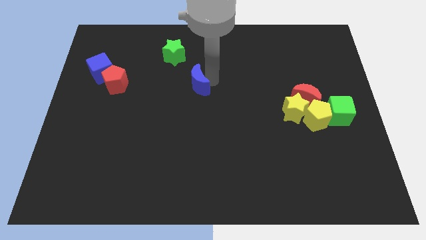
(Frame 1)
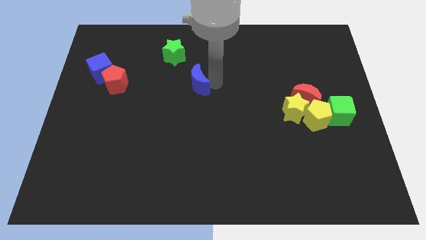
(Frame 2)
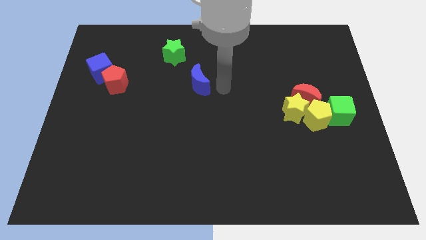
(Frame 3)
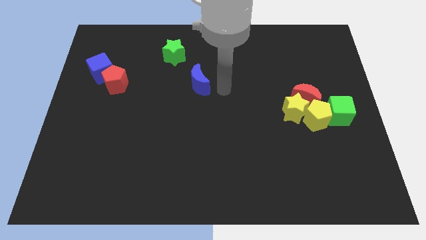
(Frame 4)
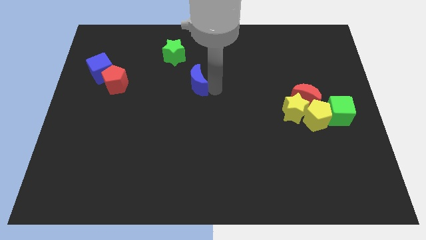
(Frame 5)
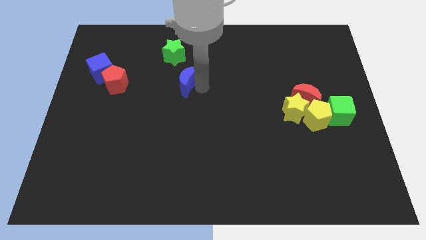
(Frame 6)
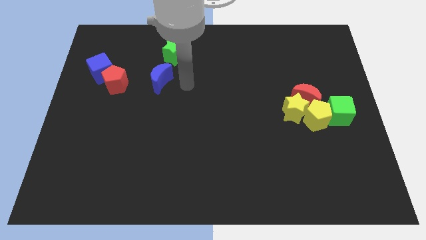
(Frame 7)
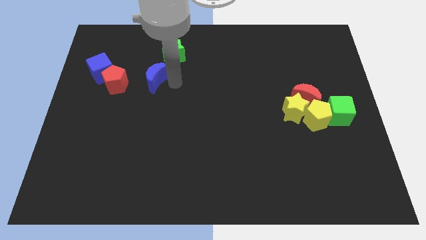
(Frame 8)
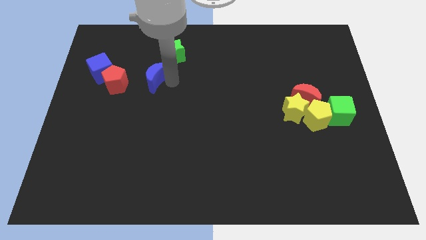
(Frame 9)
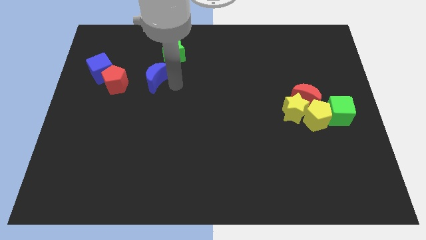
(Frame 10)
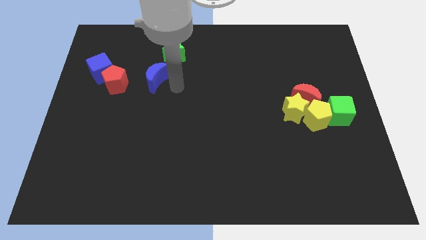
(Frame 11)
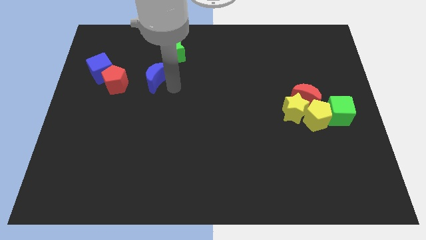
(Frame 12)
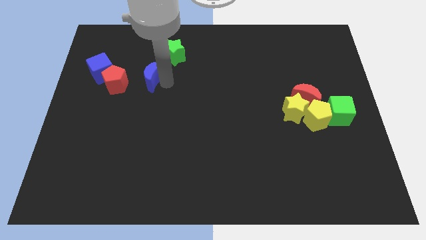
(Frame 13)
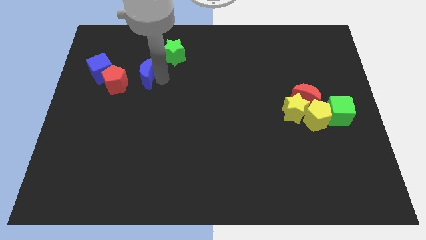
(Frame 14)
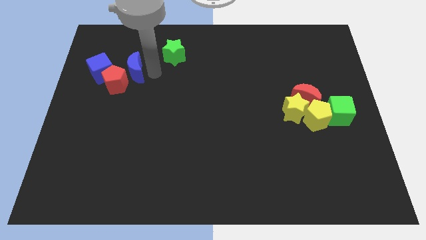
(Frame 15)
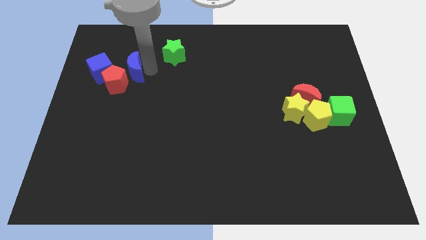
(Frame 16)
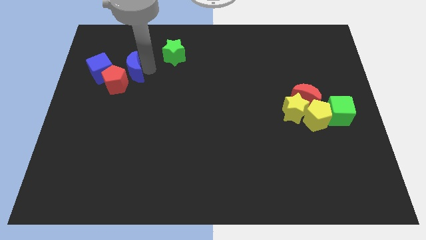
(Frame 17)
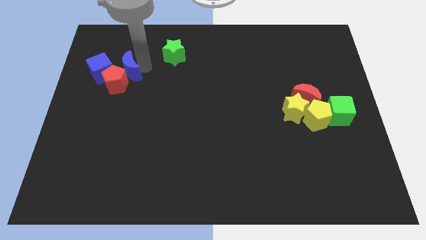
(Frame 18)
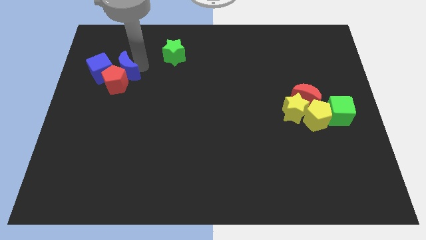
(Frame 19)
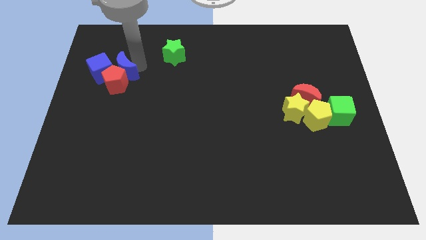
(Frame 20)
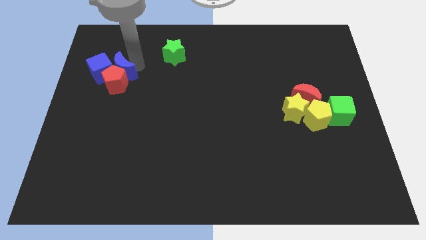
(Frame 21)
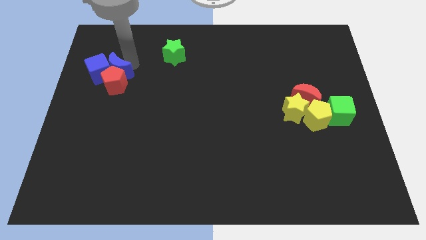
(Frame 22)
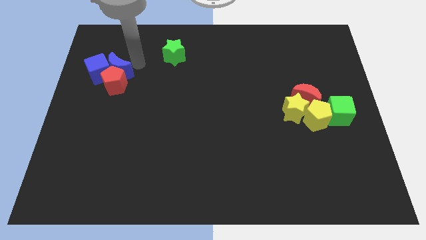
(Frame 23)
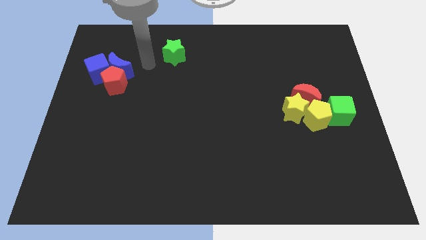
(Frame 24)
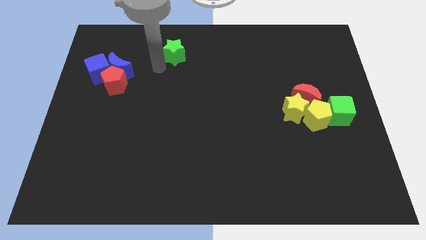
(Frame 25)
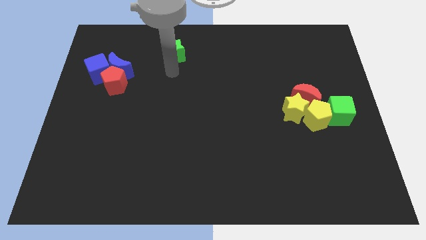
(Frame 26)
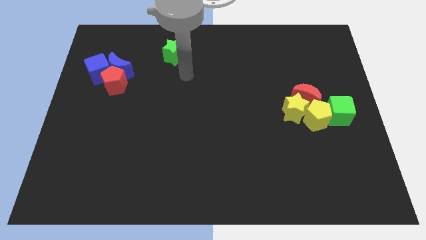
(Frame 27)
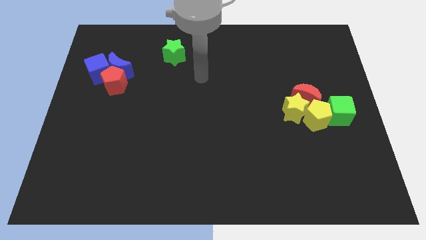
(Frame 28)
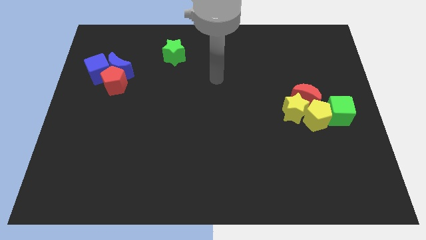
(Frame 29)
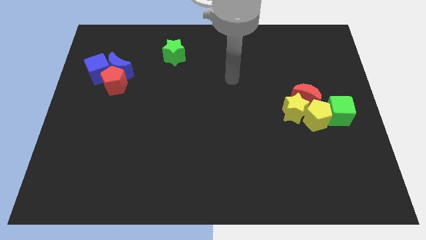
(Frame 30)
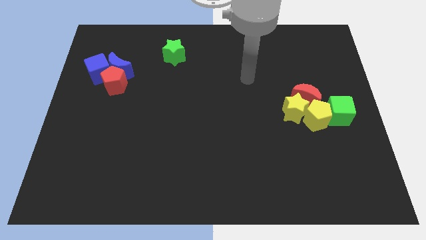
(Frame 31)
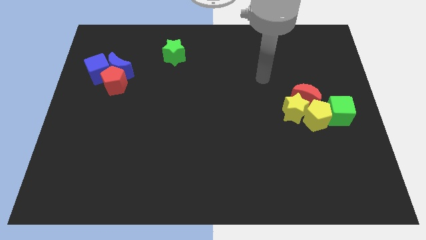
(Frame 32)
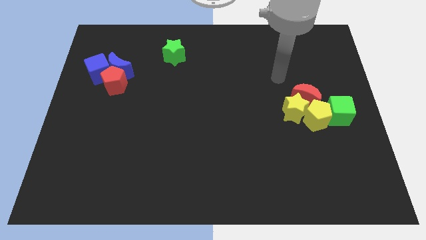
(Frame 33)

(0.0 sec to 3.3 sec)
move the blue crescent into the blue cube

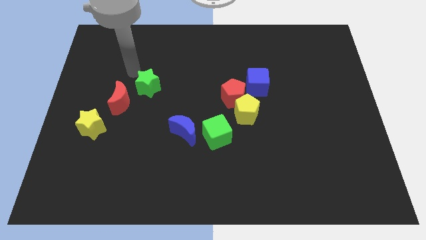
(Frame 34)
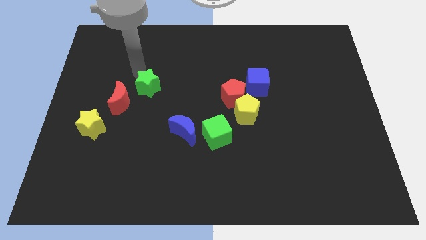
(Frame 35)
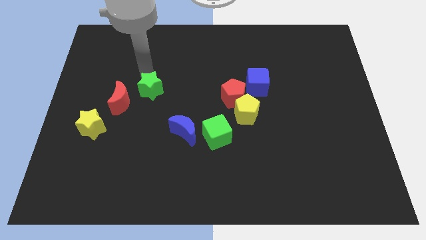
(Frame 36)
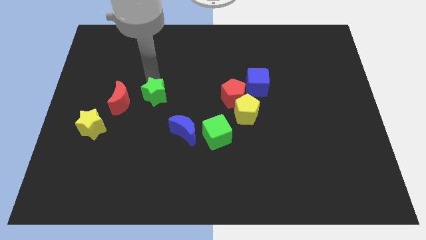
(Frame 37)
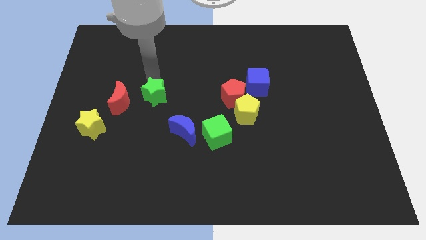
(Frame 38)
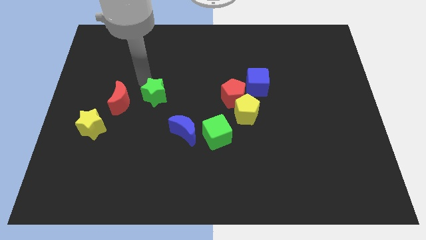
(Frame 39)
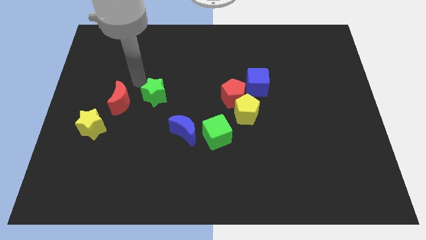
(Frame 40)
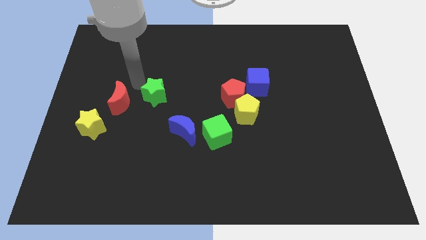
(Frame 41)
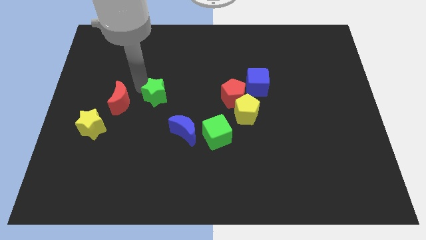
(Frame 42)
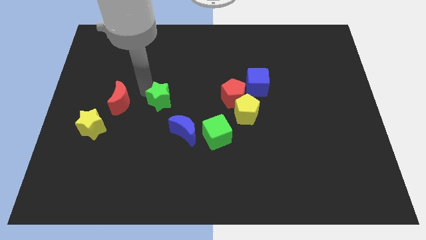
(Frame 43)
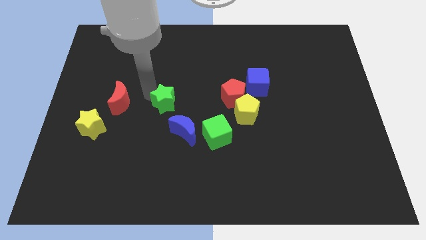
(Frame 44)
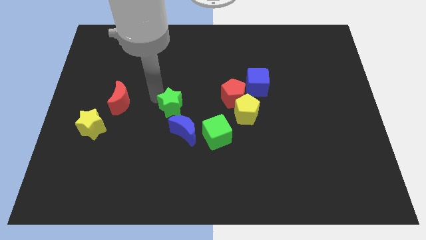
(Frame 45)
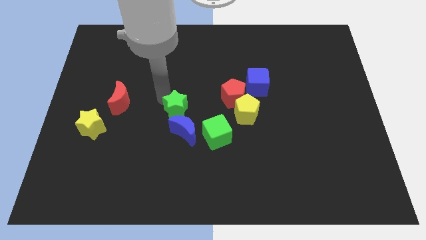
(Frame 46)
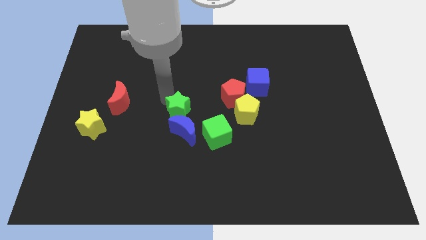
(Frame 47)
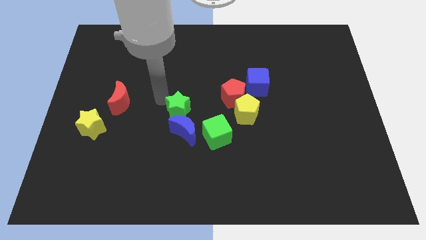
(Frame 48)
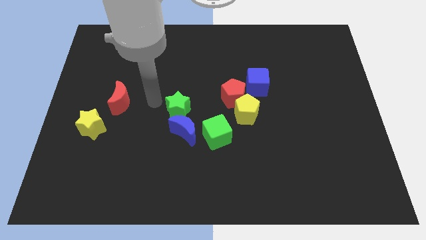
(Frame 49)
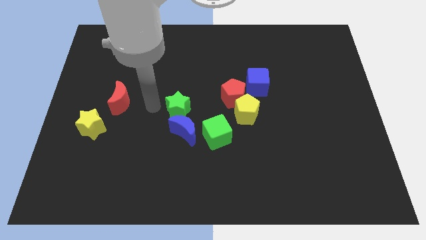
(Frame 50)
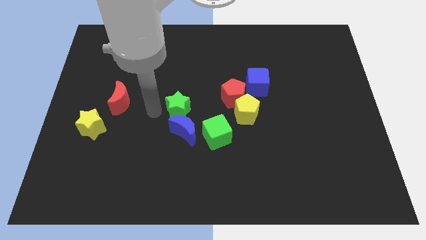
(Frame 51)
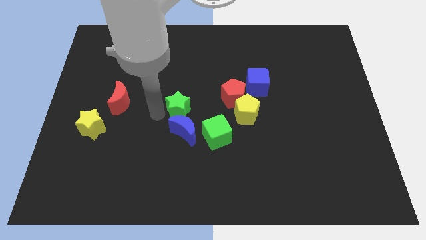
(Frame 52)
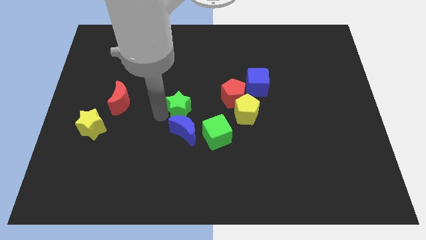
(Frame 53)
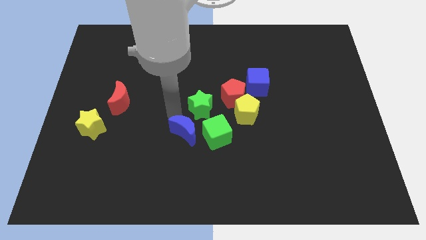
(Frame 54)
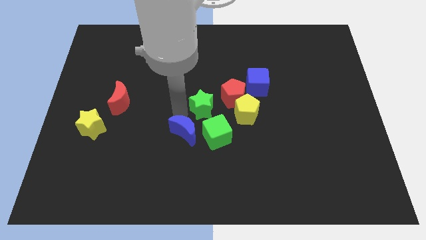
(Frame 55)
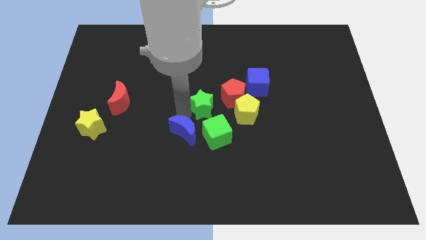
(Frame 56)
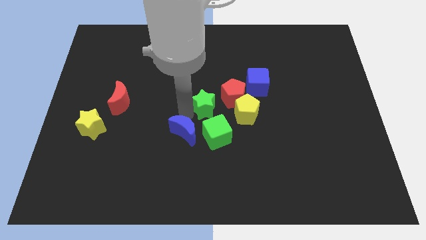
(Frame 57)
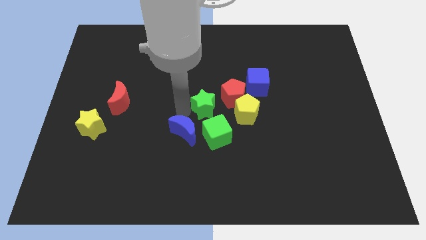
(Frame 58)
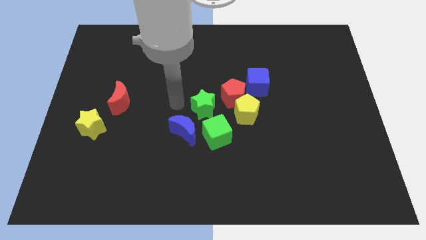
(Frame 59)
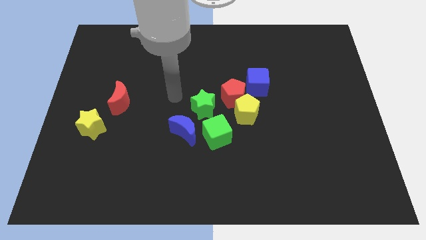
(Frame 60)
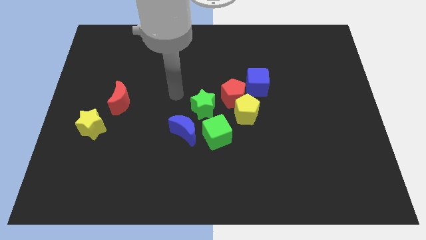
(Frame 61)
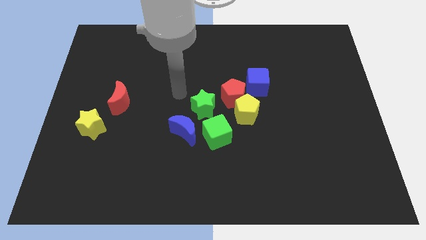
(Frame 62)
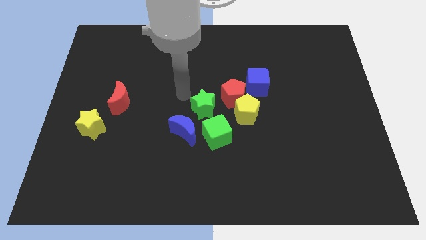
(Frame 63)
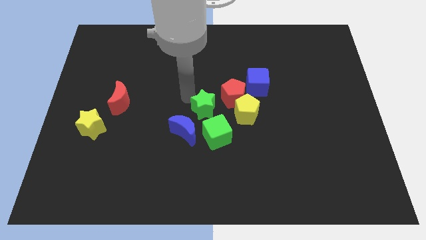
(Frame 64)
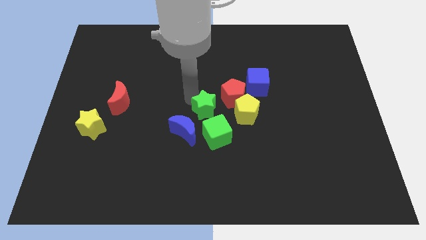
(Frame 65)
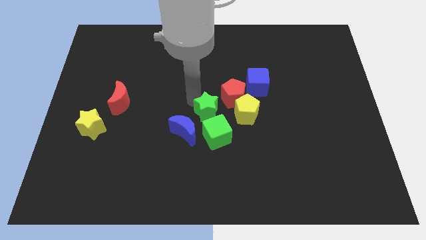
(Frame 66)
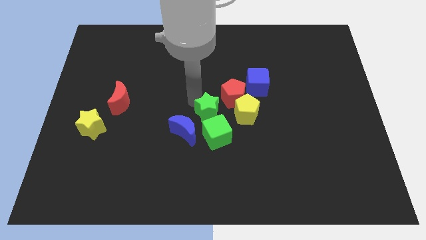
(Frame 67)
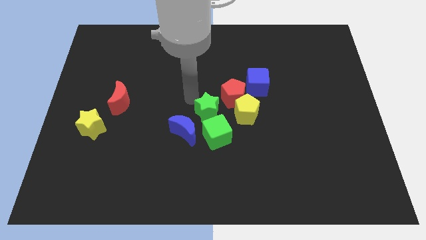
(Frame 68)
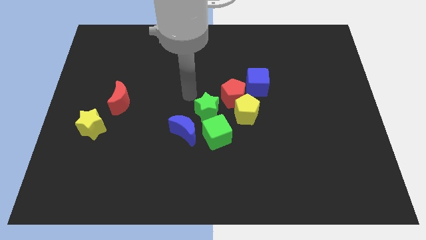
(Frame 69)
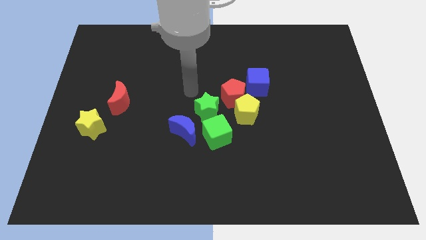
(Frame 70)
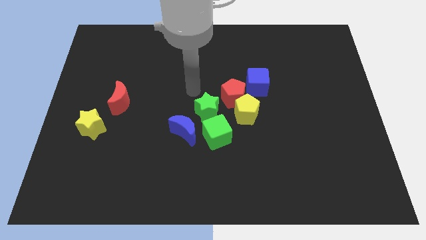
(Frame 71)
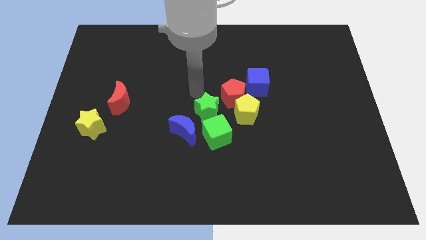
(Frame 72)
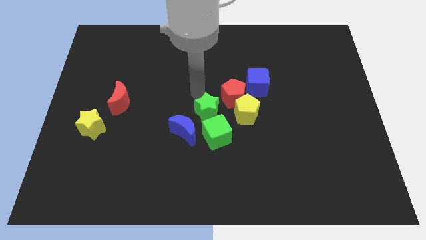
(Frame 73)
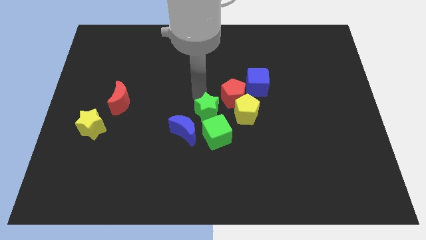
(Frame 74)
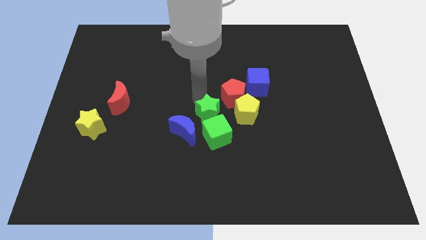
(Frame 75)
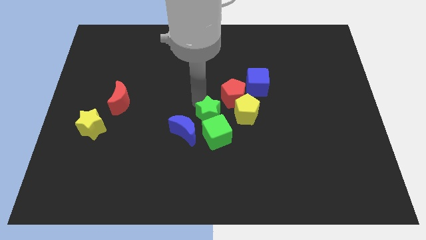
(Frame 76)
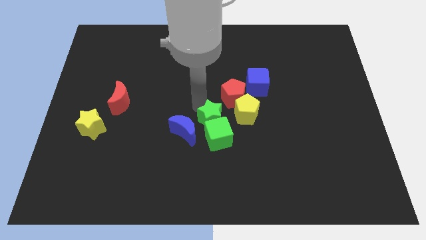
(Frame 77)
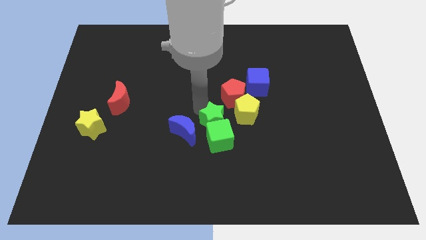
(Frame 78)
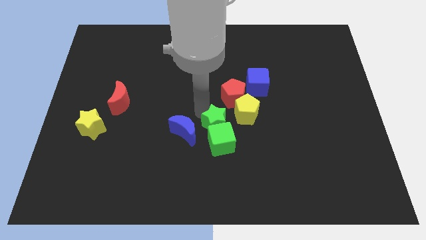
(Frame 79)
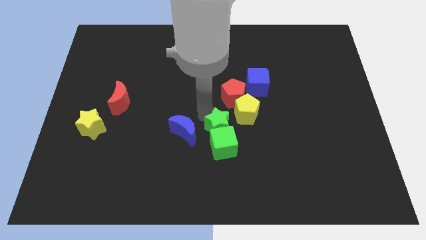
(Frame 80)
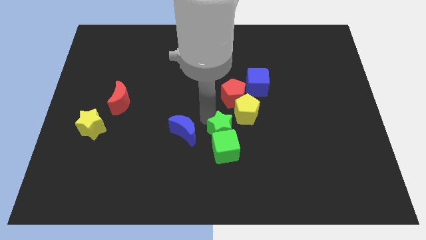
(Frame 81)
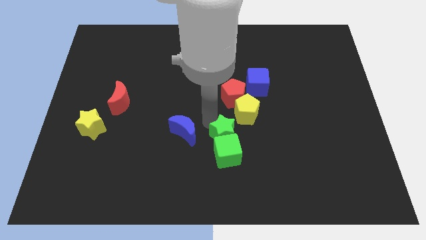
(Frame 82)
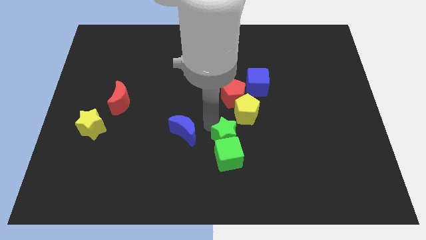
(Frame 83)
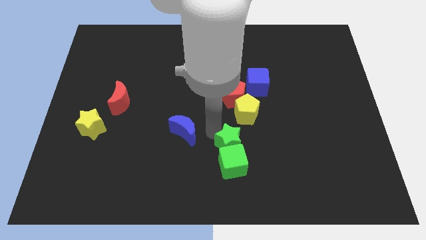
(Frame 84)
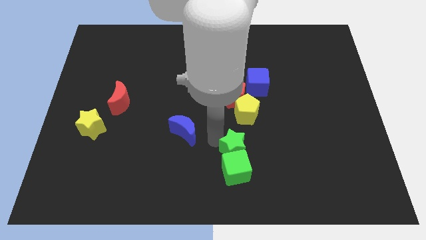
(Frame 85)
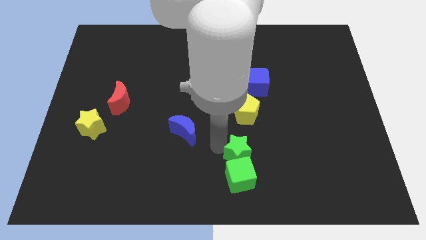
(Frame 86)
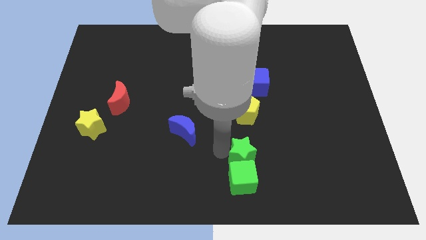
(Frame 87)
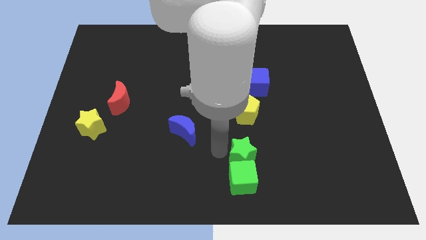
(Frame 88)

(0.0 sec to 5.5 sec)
push the green cube with the help of a green star to place under the yellow pentagon

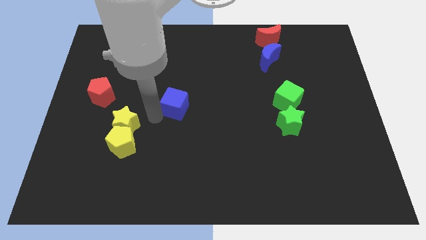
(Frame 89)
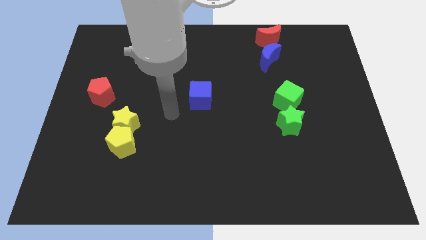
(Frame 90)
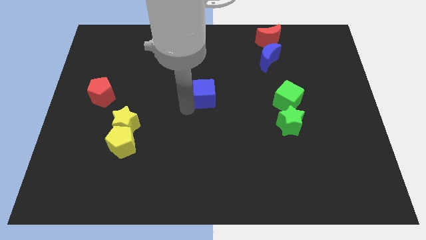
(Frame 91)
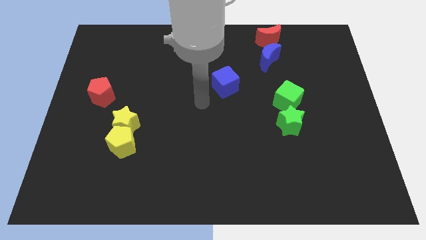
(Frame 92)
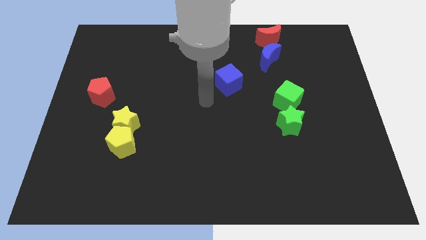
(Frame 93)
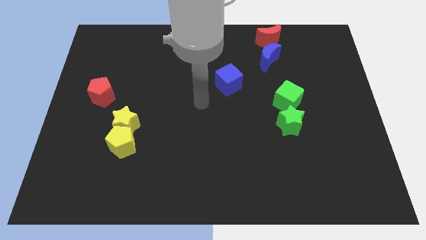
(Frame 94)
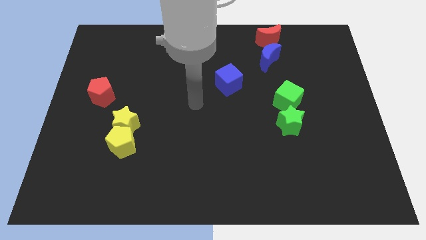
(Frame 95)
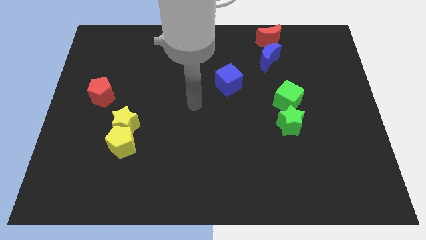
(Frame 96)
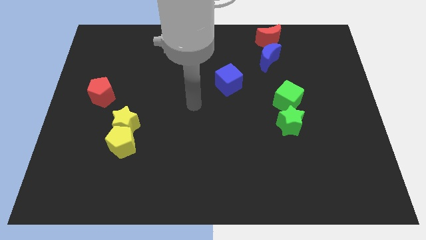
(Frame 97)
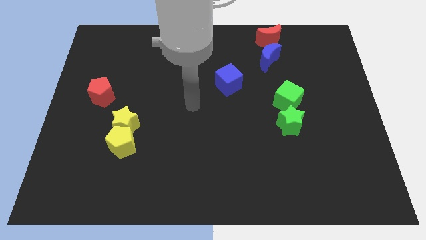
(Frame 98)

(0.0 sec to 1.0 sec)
move the blue cube to blue crescent
